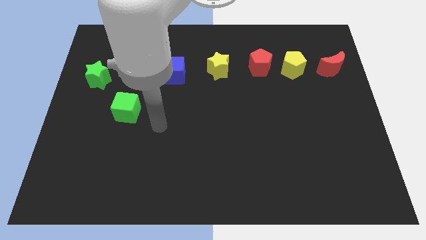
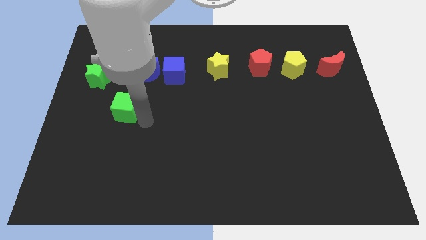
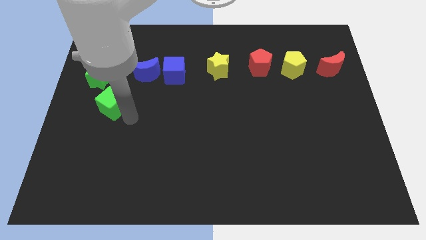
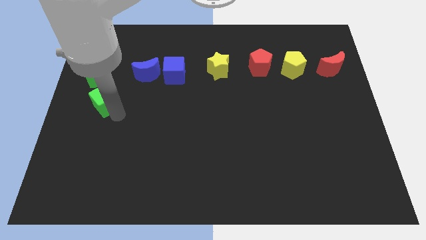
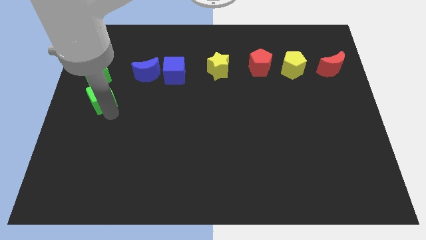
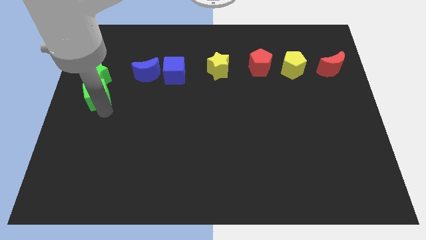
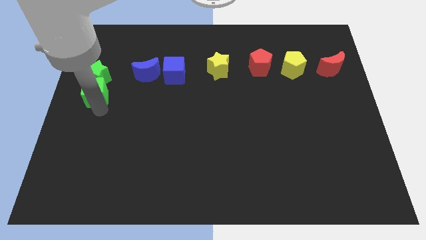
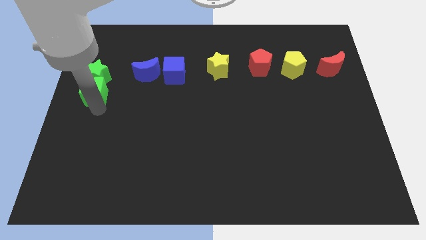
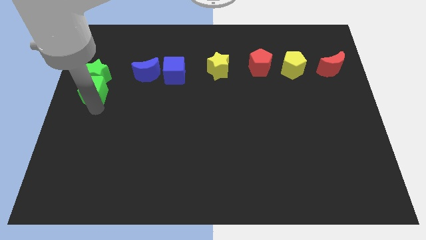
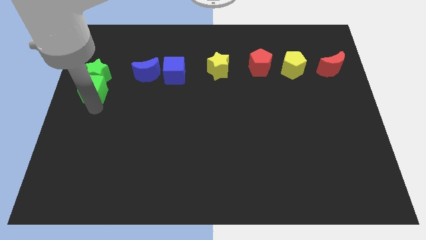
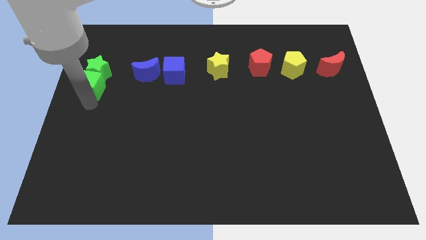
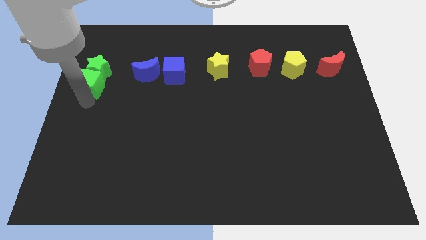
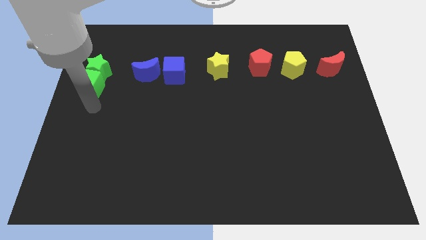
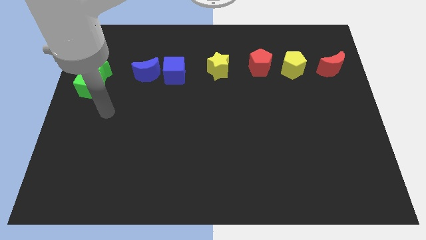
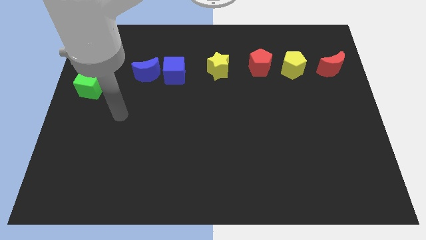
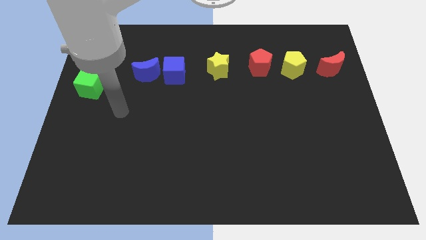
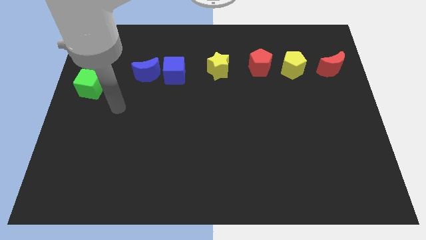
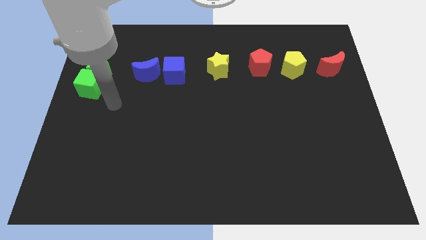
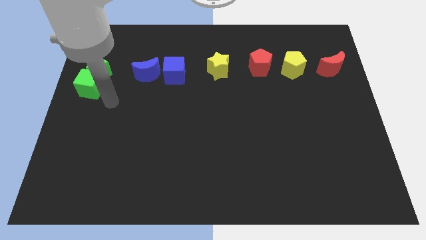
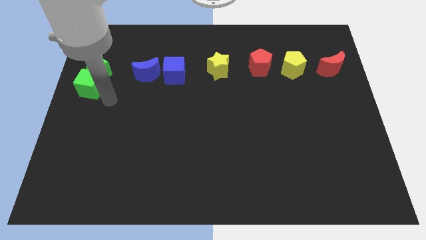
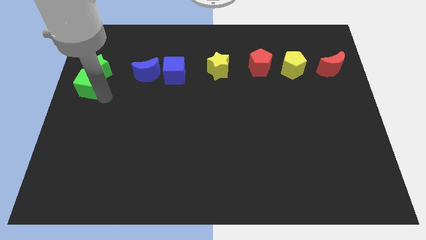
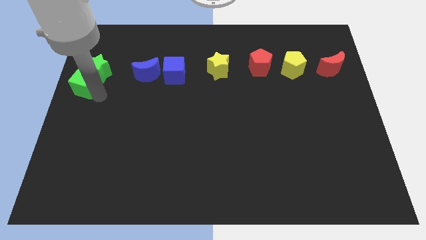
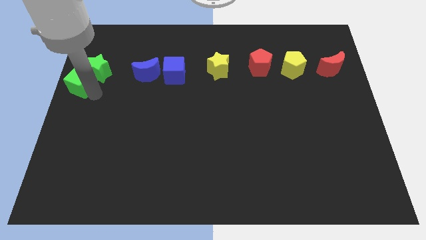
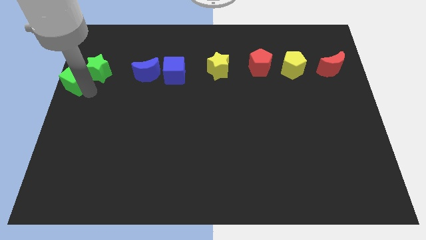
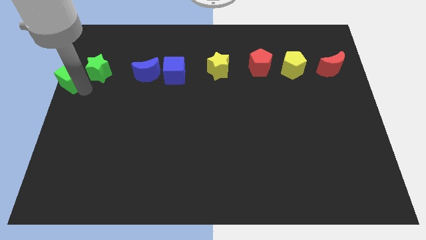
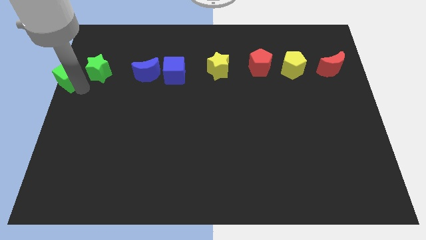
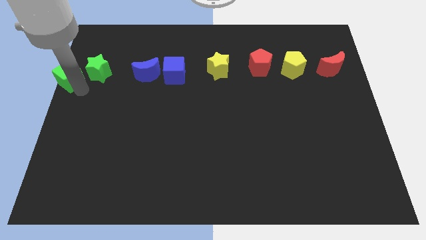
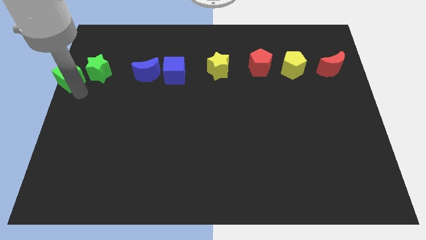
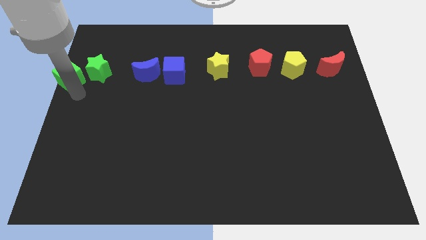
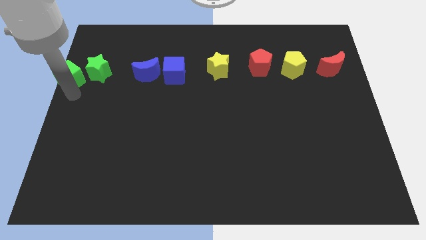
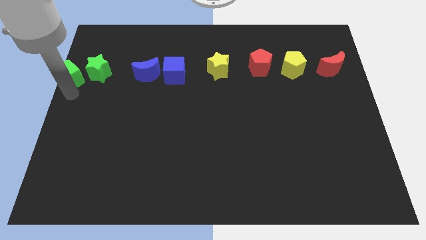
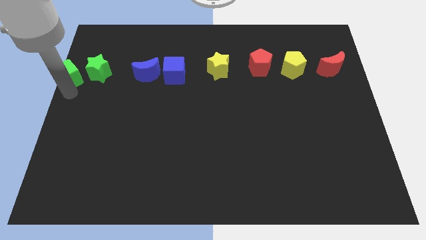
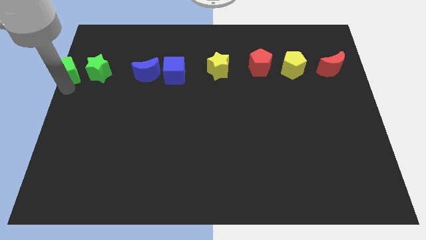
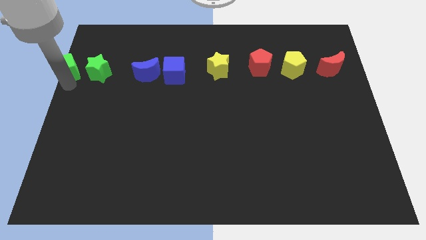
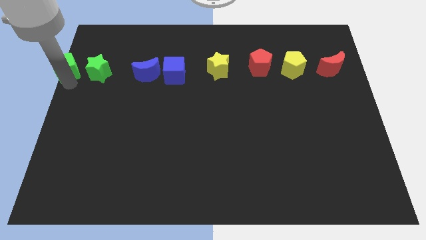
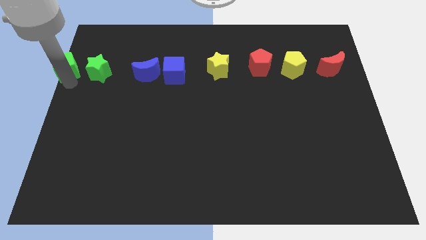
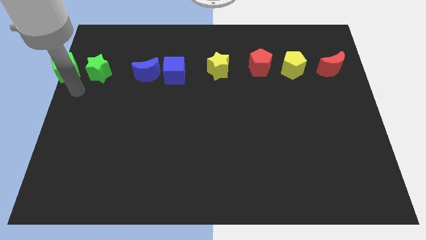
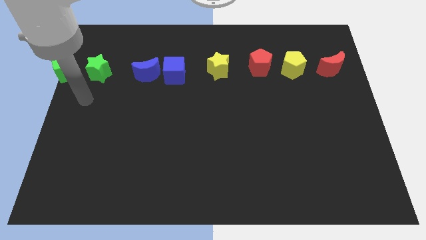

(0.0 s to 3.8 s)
push the green cube to the left side of the green star

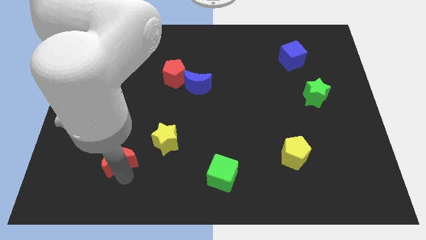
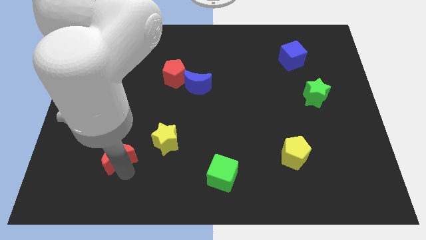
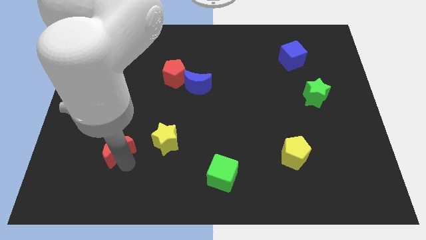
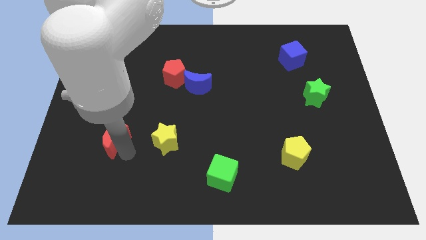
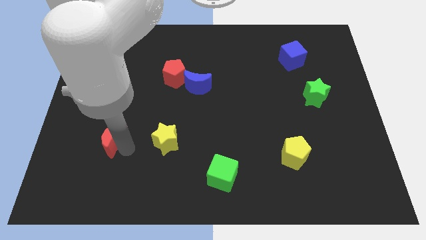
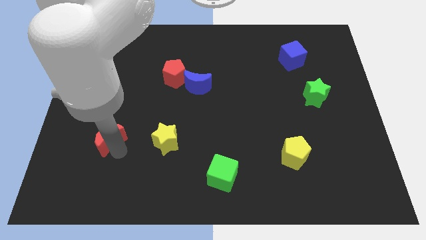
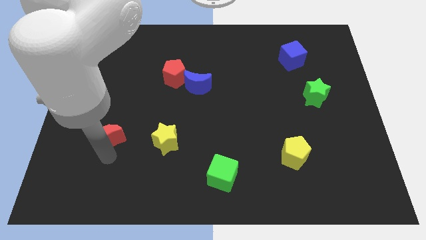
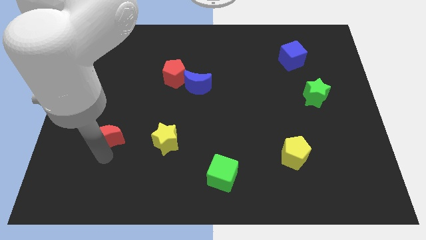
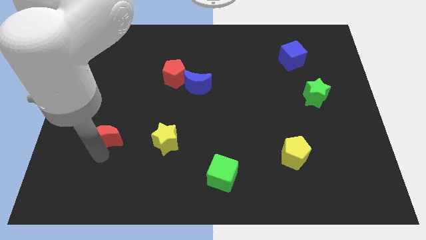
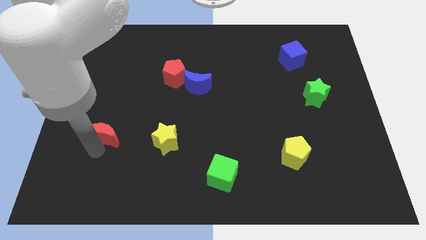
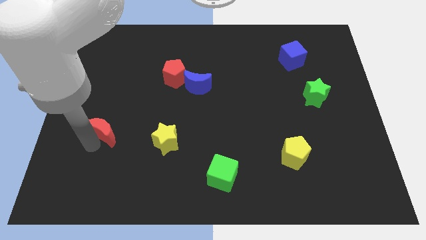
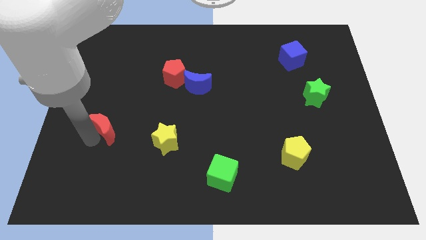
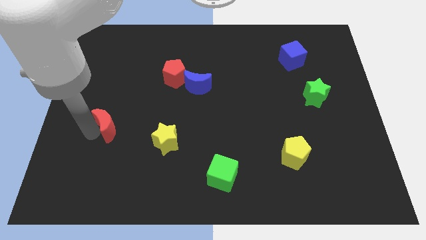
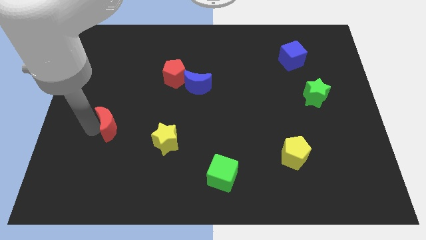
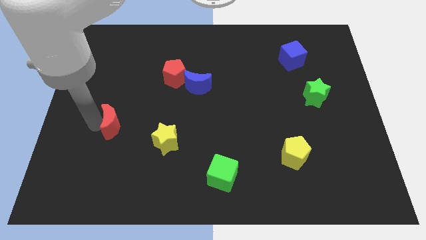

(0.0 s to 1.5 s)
drag the red moon slightly upwards

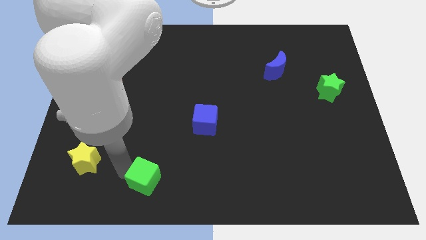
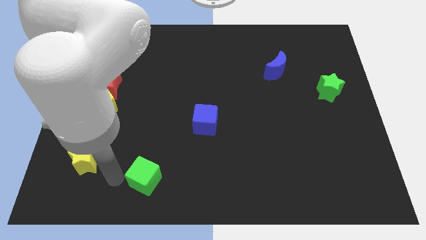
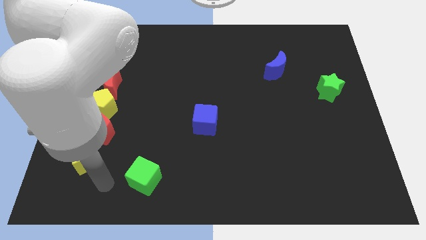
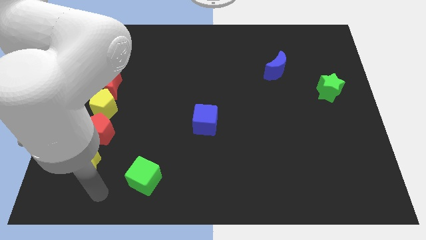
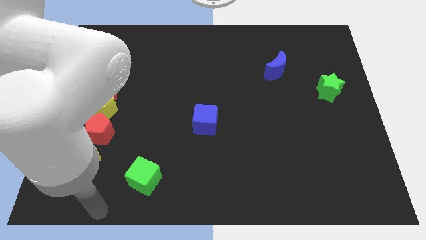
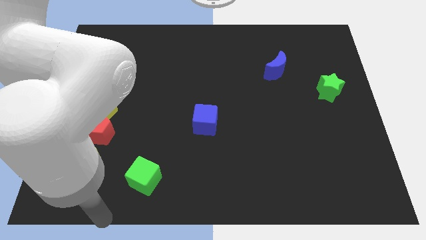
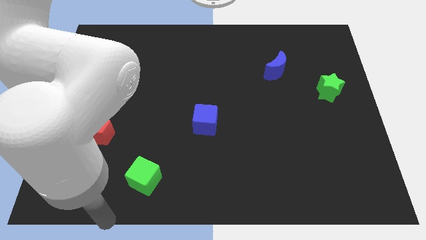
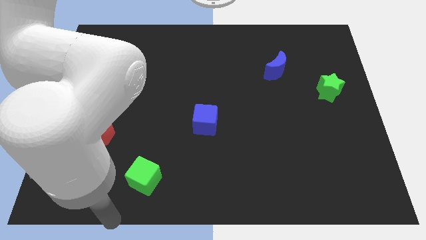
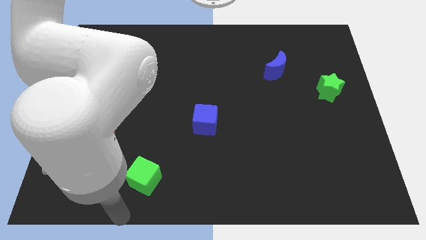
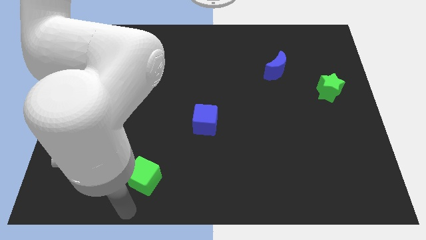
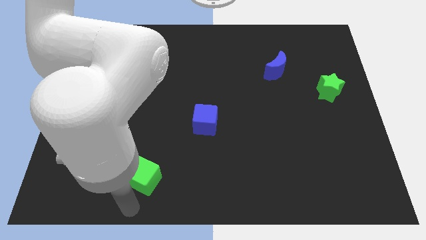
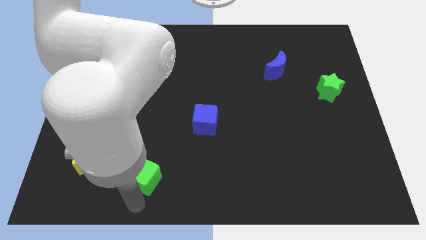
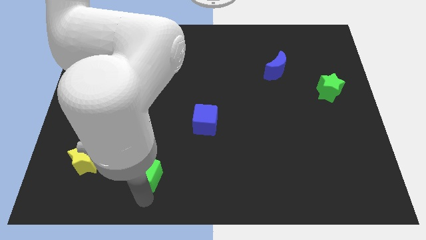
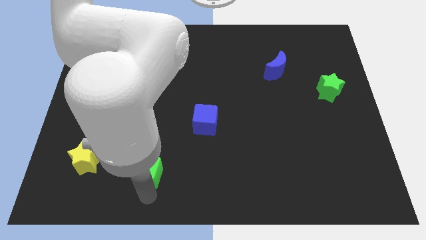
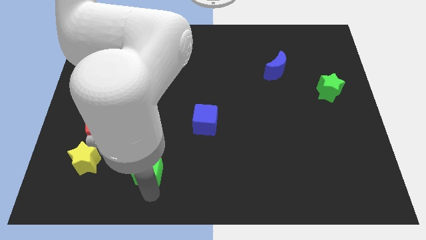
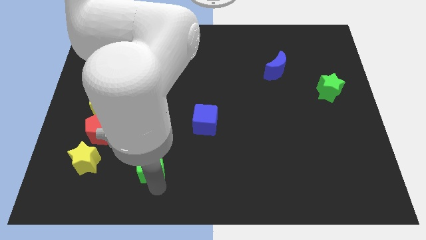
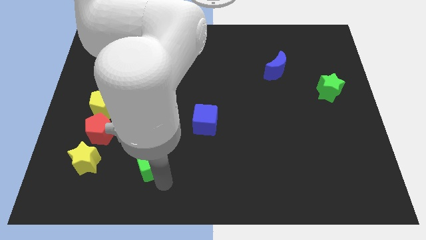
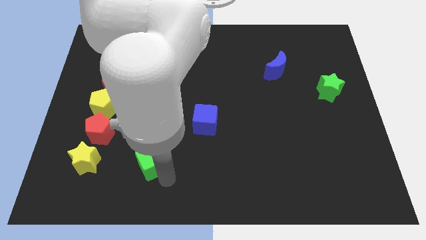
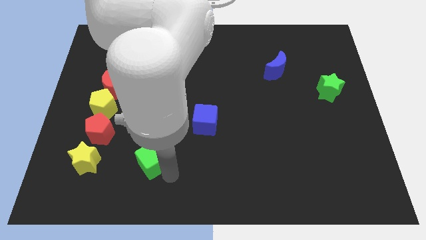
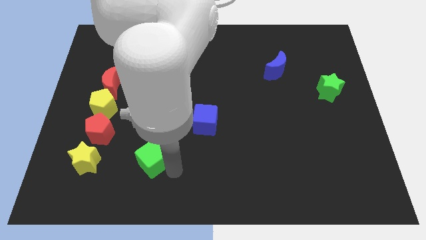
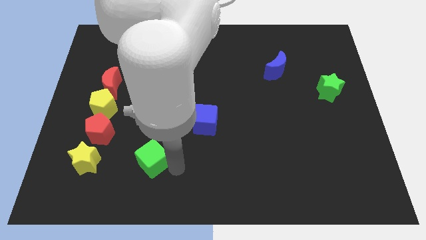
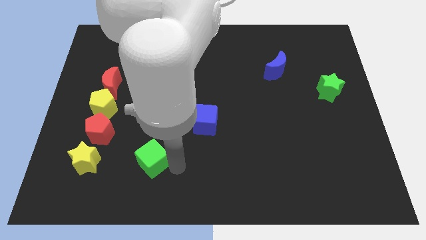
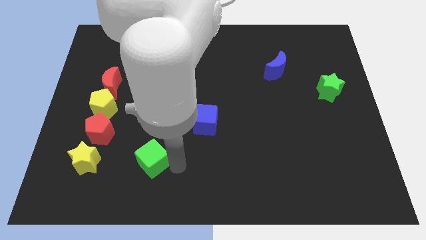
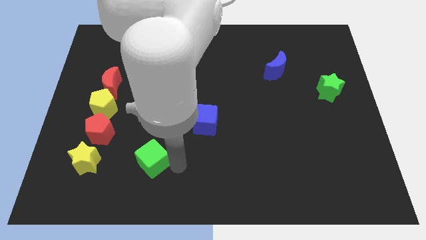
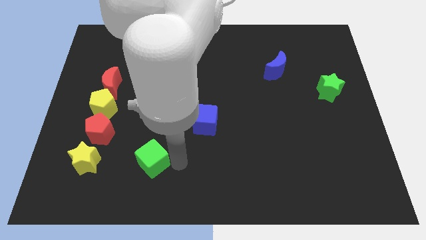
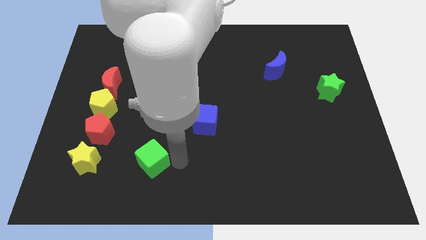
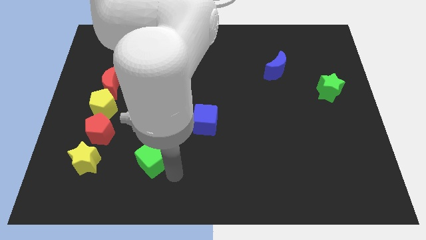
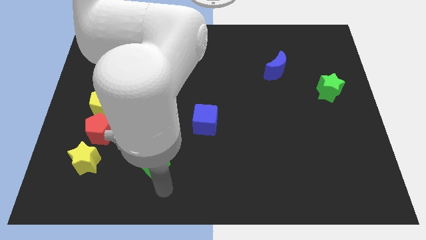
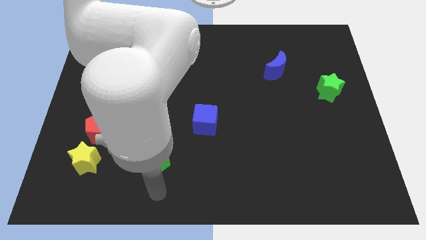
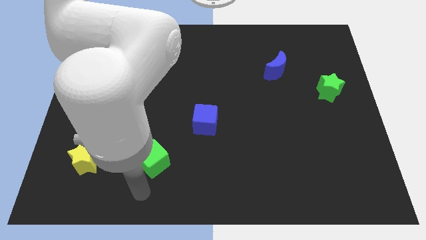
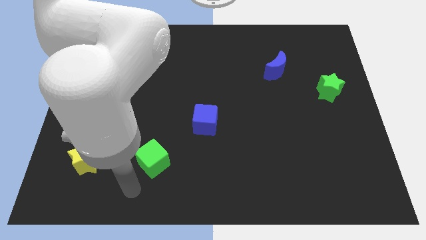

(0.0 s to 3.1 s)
move the green cube slightly towards the right of yellow star

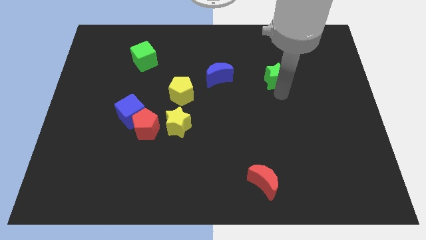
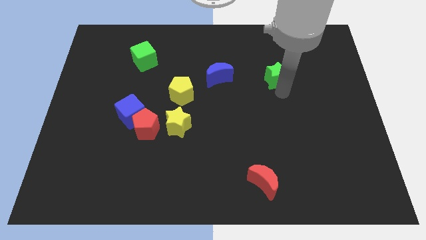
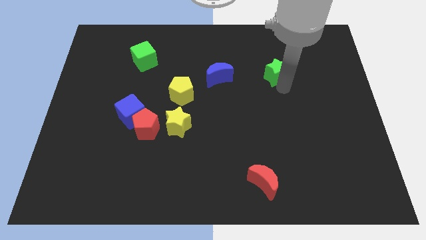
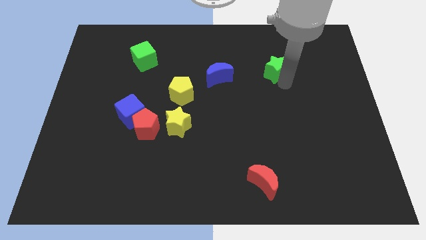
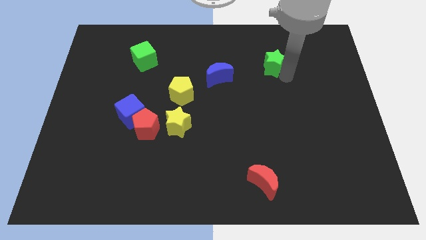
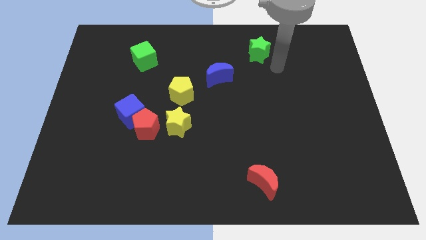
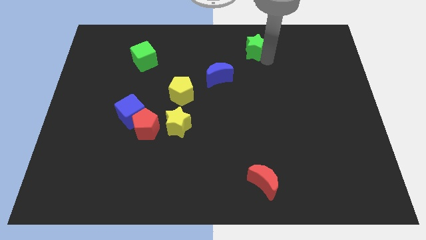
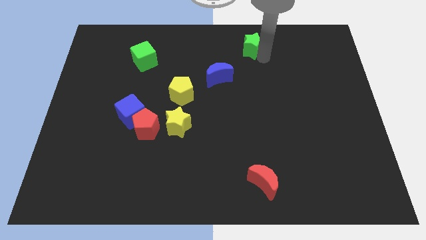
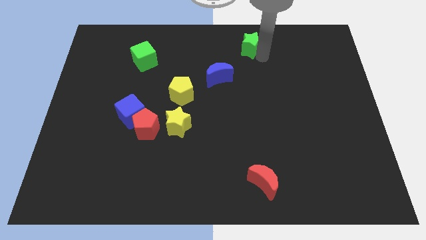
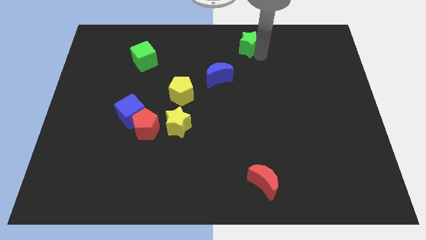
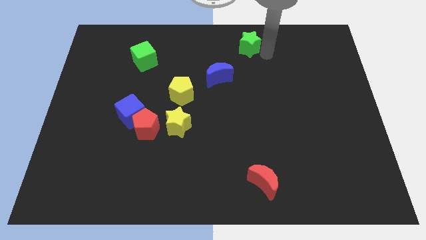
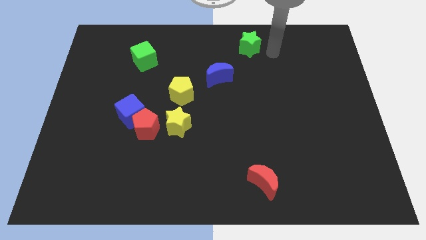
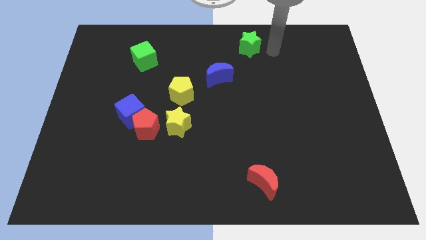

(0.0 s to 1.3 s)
slide the green star diagonally top right to the blue crescent
